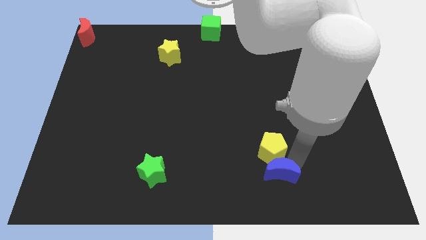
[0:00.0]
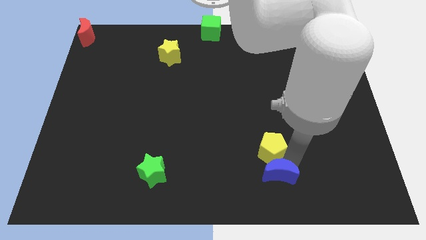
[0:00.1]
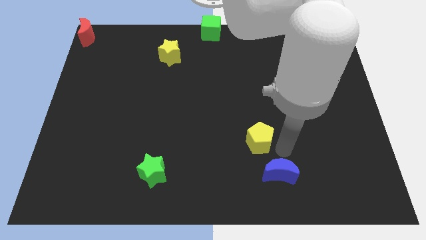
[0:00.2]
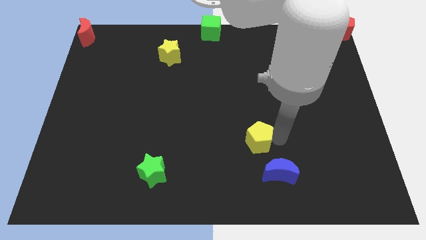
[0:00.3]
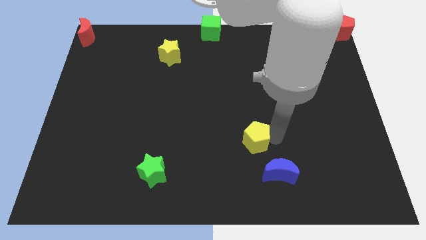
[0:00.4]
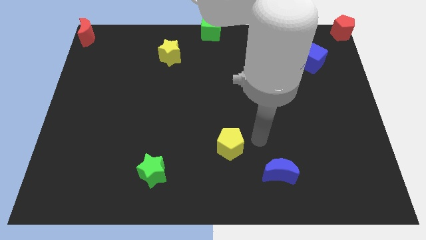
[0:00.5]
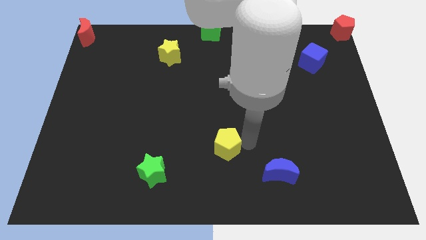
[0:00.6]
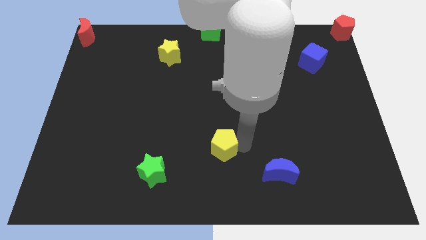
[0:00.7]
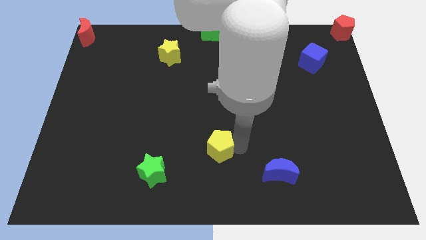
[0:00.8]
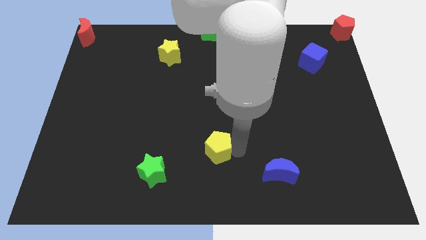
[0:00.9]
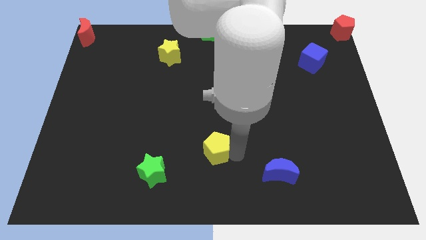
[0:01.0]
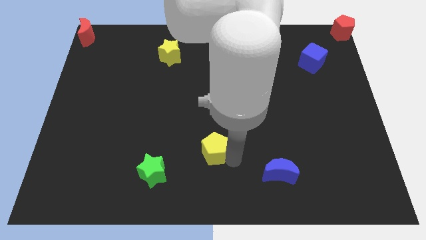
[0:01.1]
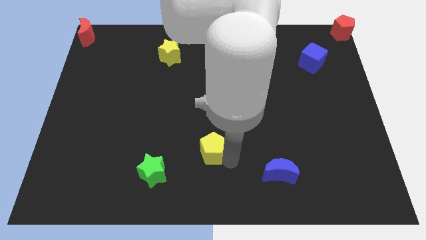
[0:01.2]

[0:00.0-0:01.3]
push yellow pentagon below green cube

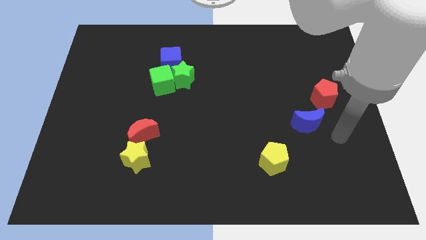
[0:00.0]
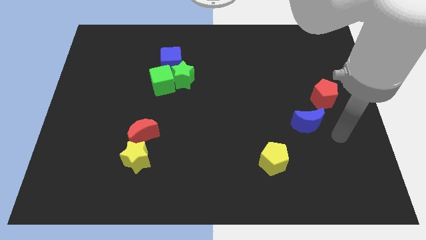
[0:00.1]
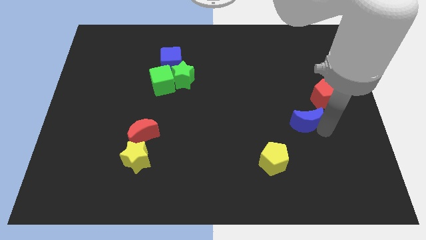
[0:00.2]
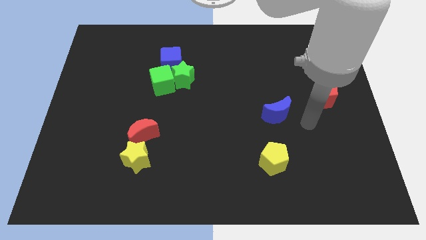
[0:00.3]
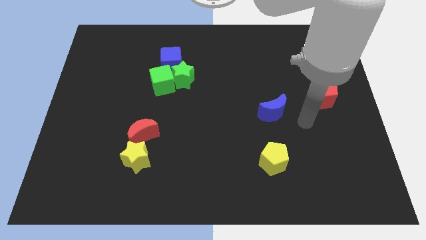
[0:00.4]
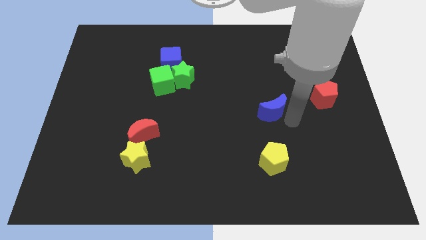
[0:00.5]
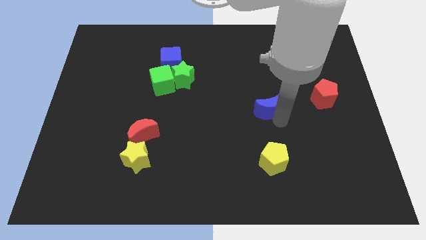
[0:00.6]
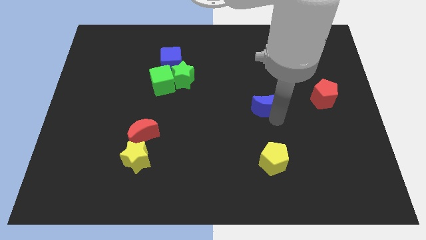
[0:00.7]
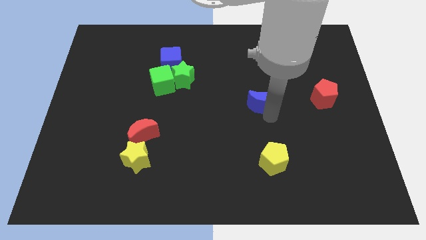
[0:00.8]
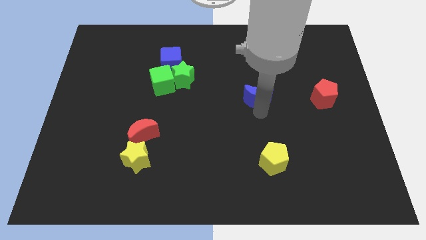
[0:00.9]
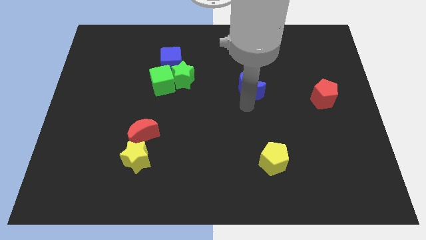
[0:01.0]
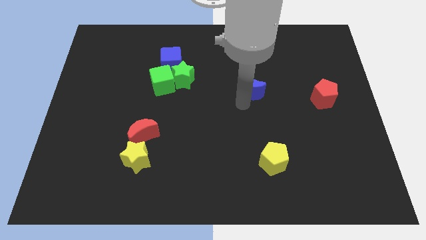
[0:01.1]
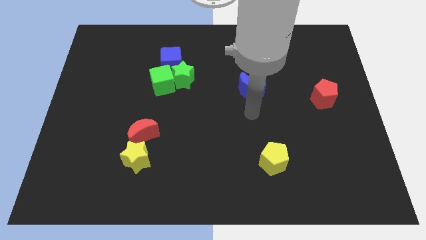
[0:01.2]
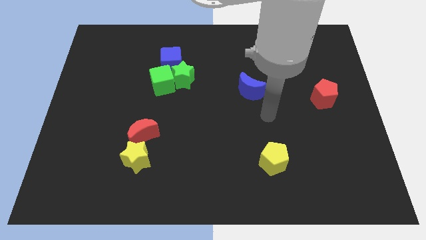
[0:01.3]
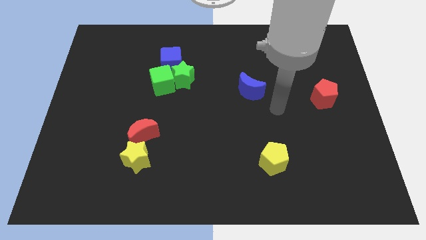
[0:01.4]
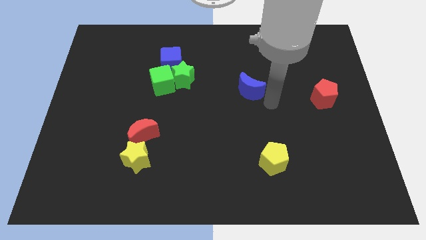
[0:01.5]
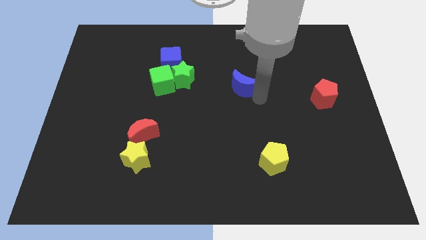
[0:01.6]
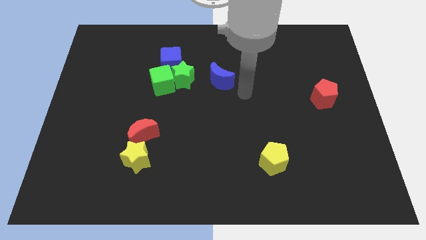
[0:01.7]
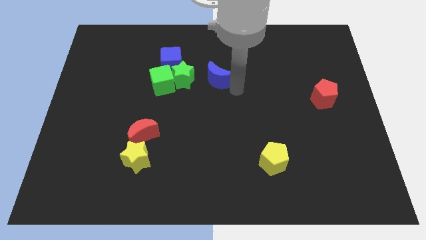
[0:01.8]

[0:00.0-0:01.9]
move the blue crescent horizontal to the green star on the right side

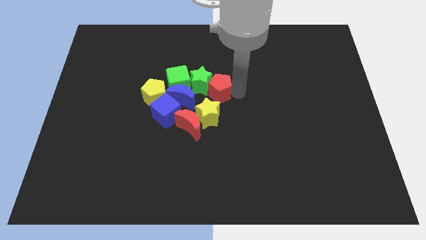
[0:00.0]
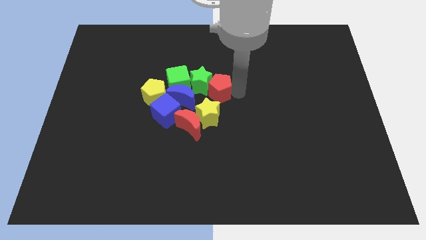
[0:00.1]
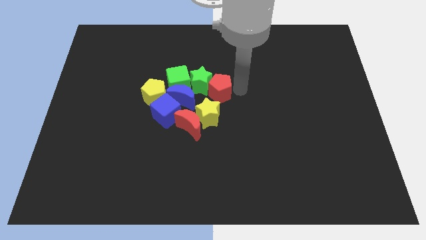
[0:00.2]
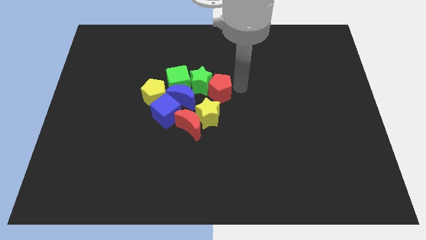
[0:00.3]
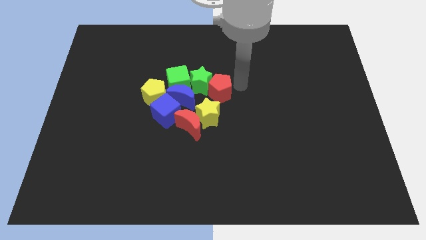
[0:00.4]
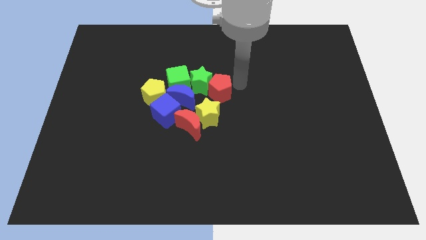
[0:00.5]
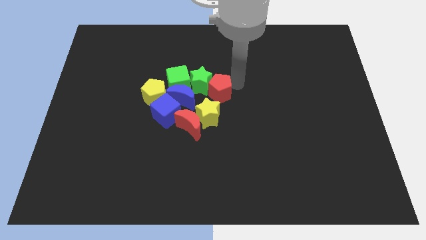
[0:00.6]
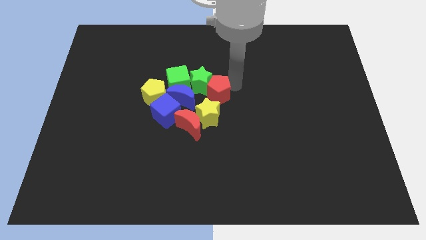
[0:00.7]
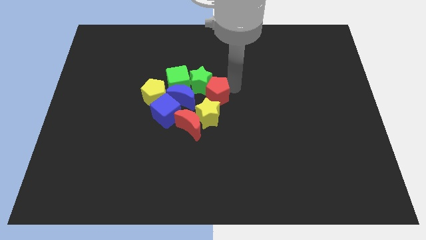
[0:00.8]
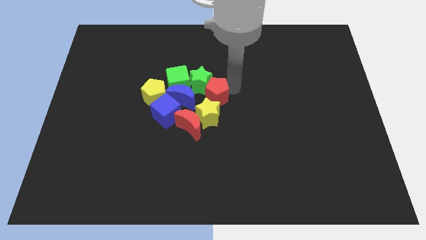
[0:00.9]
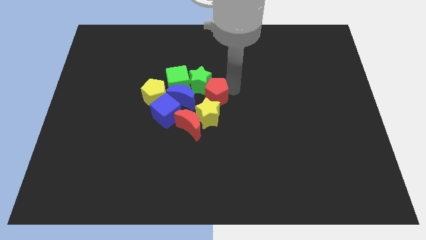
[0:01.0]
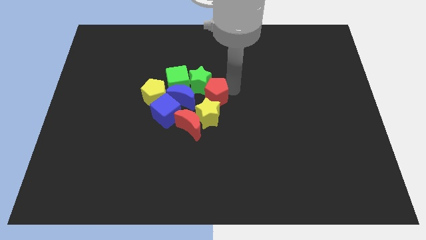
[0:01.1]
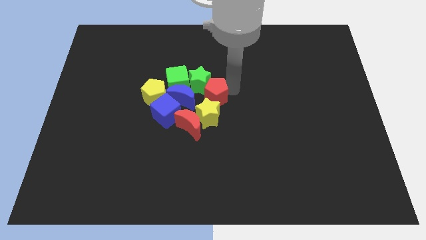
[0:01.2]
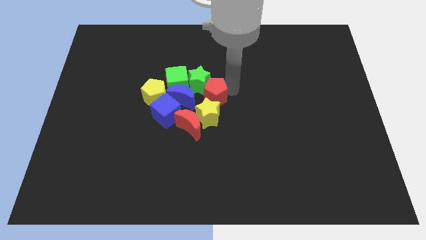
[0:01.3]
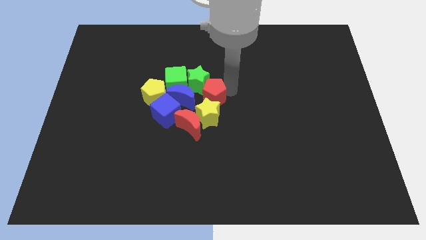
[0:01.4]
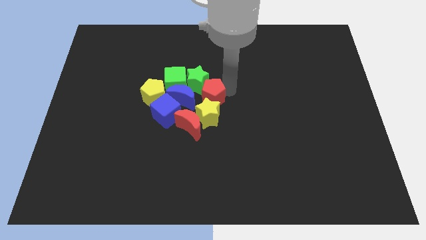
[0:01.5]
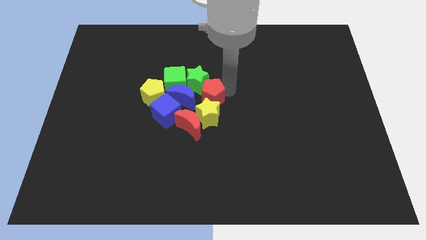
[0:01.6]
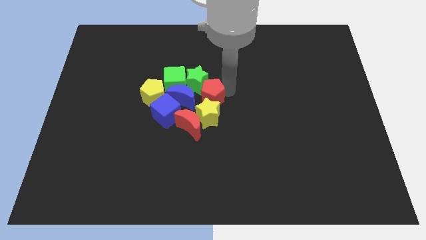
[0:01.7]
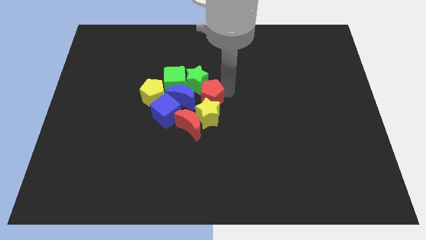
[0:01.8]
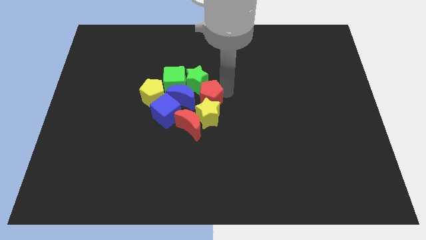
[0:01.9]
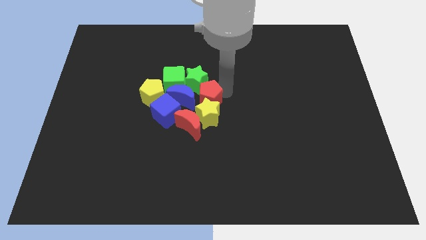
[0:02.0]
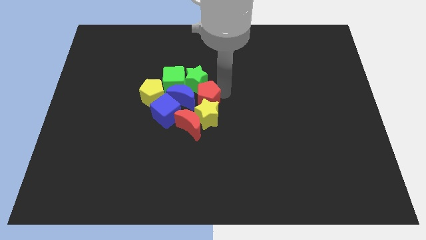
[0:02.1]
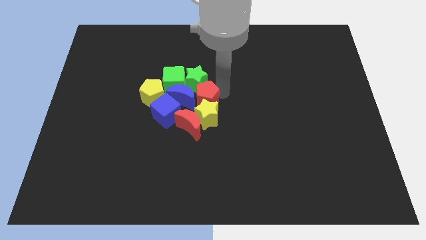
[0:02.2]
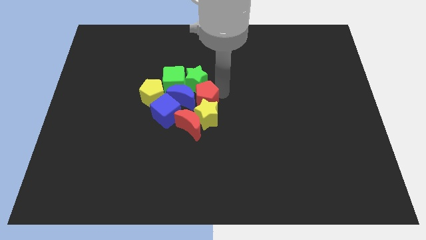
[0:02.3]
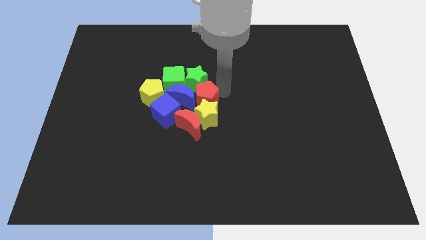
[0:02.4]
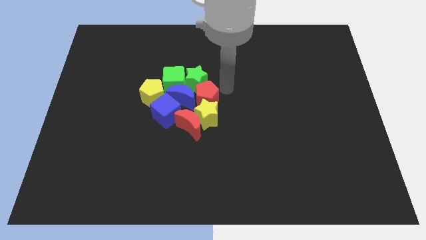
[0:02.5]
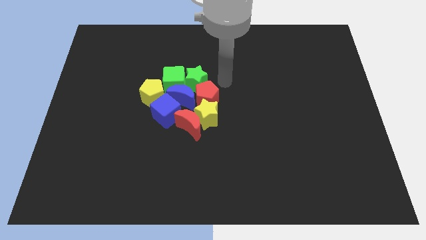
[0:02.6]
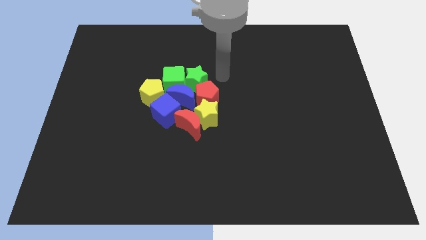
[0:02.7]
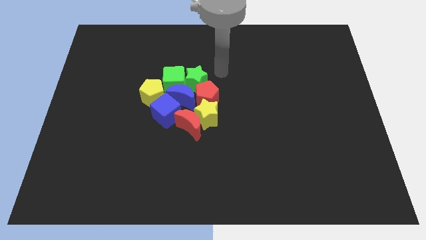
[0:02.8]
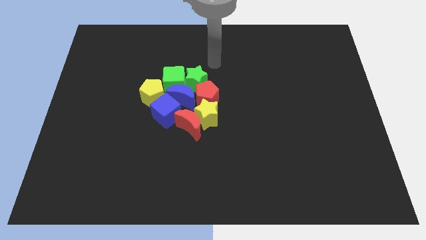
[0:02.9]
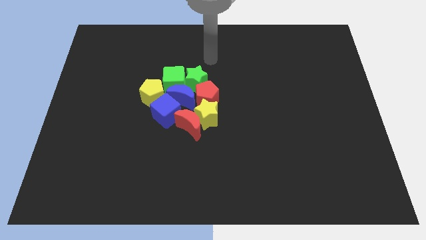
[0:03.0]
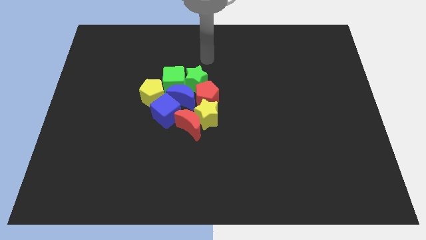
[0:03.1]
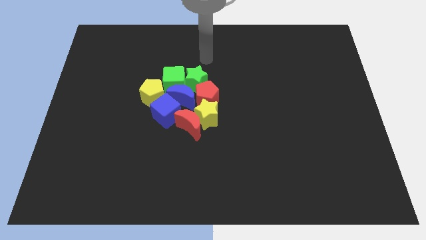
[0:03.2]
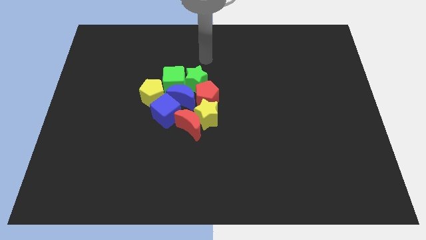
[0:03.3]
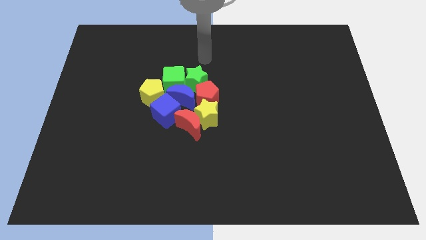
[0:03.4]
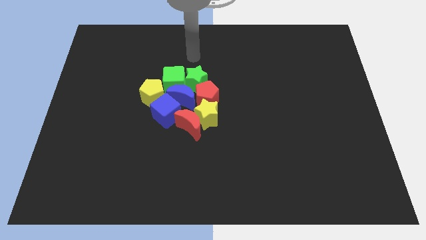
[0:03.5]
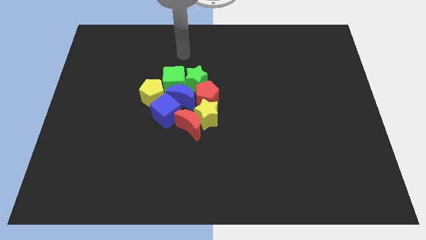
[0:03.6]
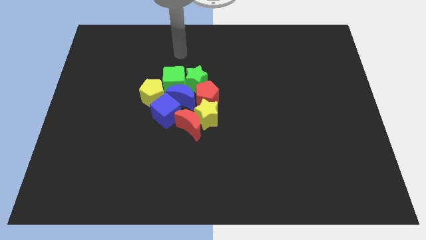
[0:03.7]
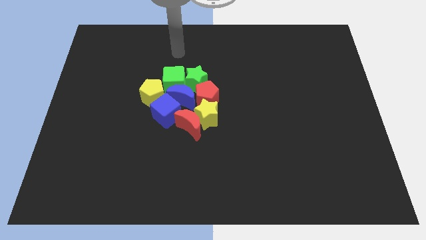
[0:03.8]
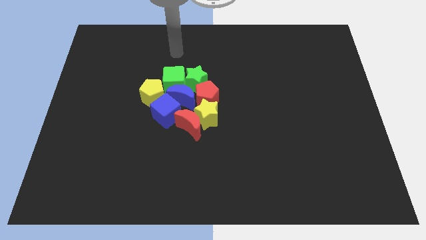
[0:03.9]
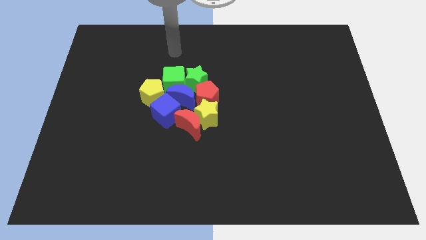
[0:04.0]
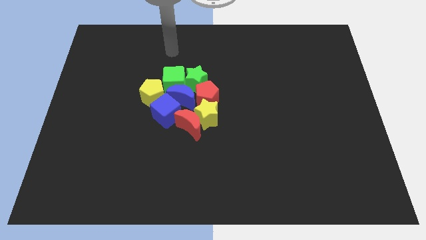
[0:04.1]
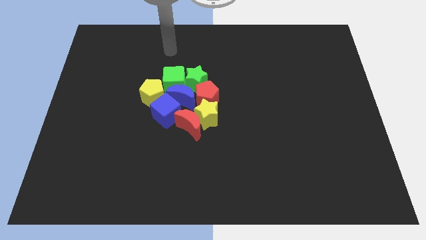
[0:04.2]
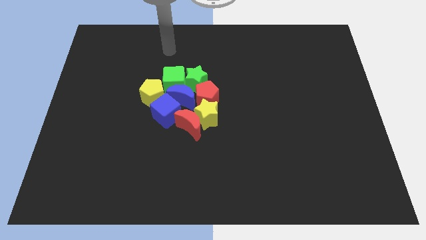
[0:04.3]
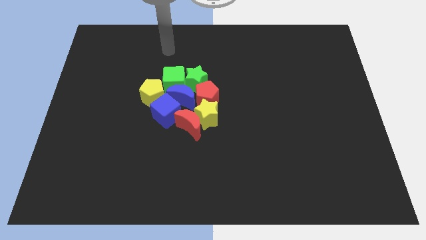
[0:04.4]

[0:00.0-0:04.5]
push the red pentagon in between the green star and yellow star to form a circle

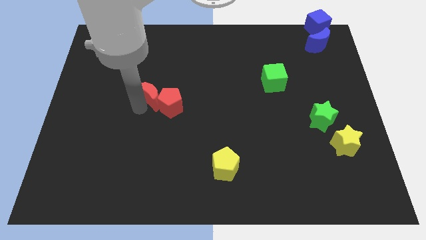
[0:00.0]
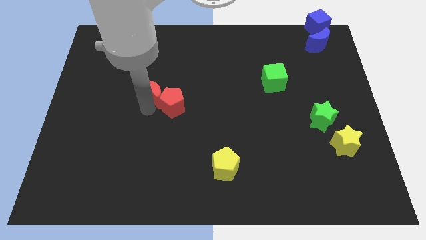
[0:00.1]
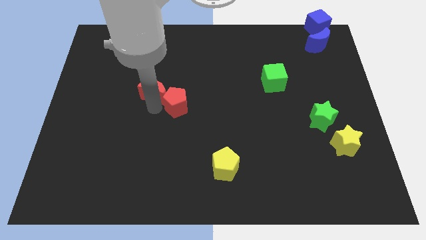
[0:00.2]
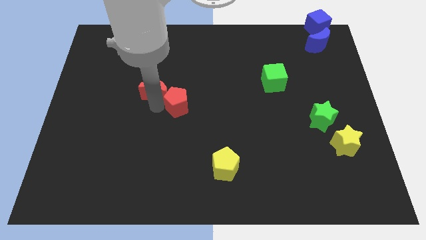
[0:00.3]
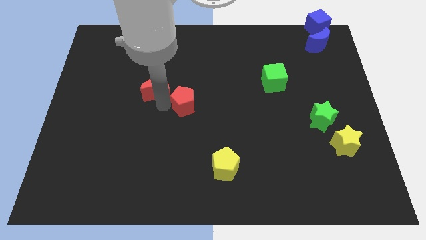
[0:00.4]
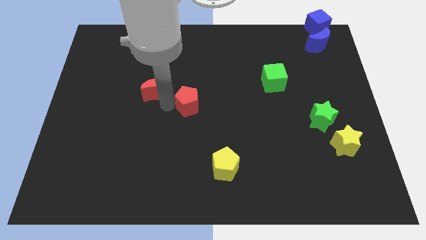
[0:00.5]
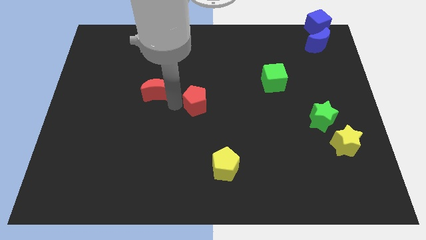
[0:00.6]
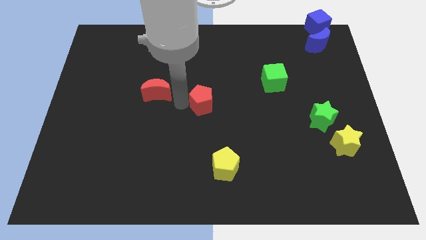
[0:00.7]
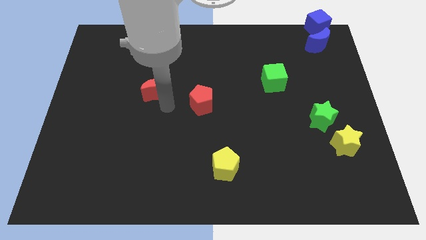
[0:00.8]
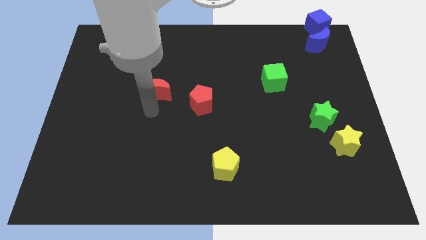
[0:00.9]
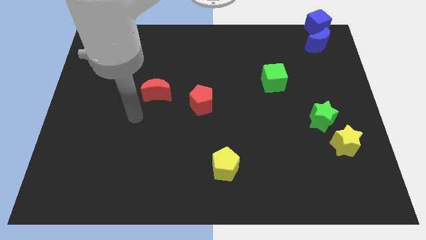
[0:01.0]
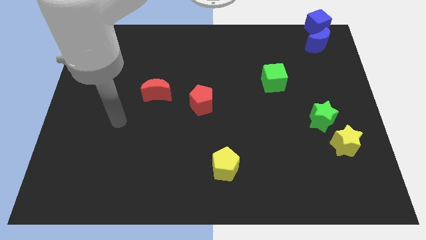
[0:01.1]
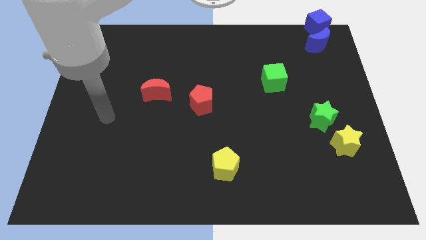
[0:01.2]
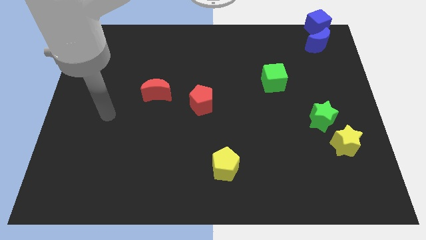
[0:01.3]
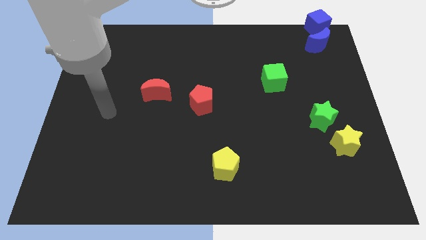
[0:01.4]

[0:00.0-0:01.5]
separate the red crescent and the red pentagon
